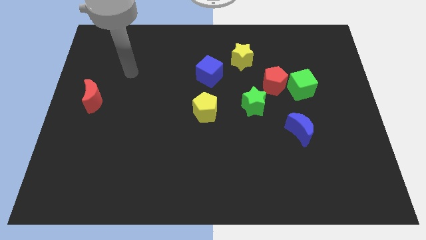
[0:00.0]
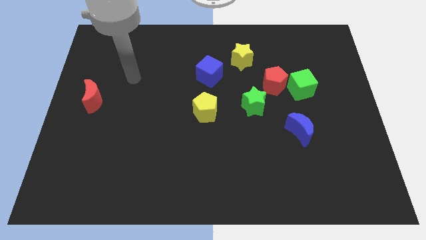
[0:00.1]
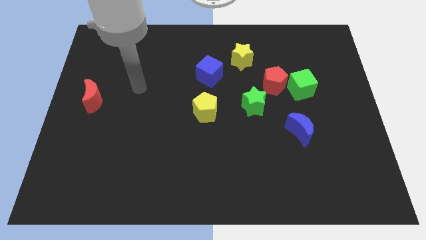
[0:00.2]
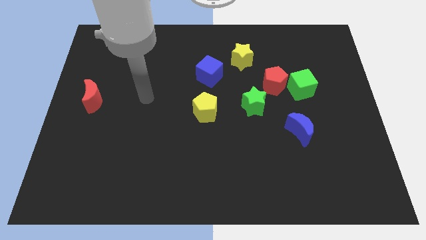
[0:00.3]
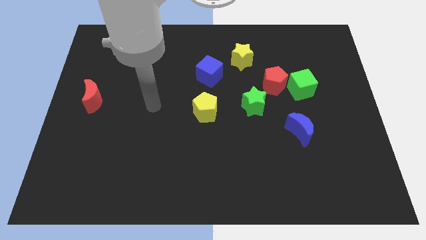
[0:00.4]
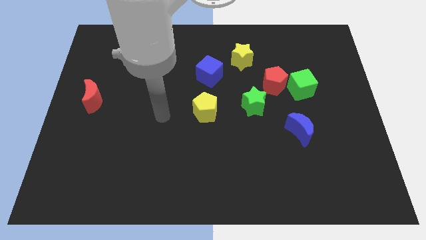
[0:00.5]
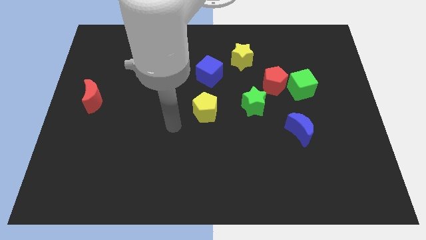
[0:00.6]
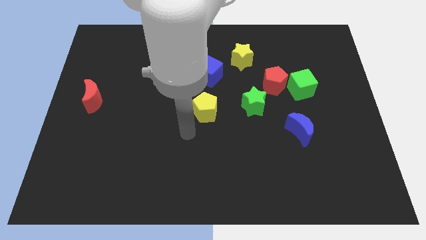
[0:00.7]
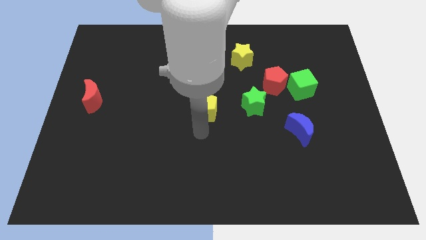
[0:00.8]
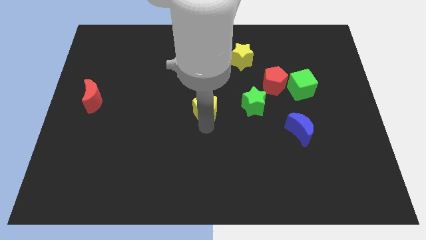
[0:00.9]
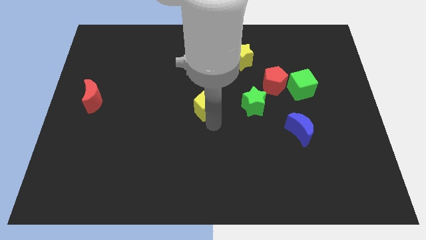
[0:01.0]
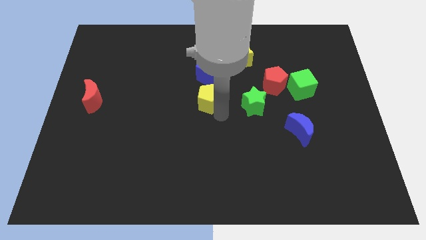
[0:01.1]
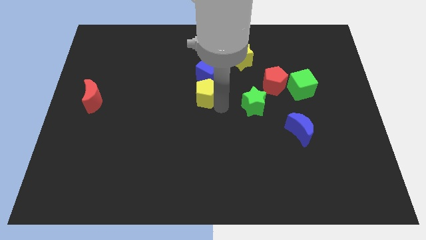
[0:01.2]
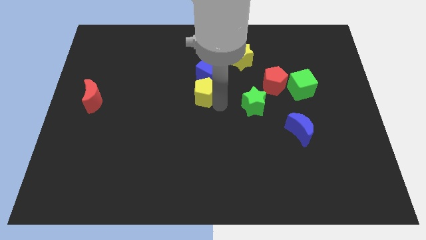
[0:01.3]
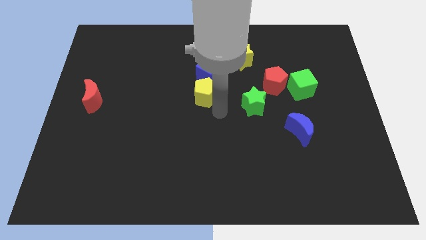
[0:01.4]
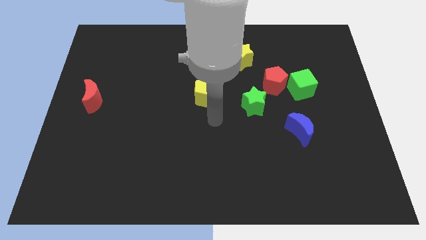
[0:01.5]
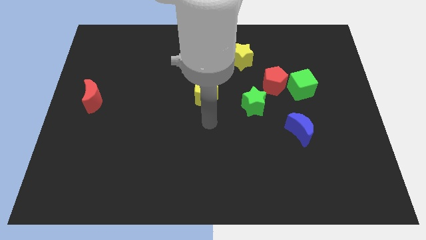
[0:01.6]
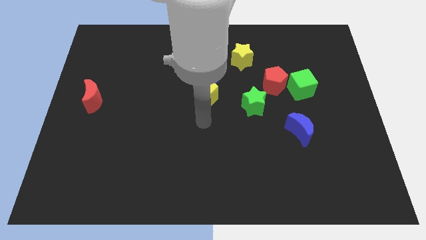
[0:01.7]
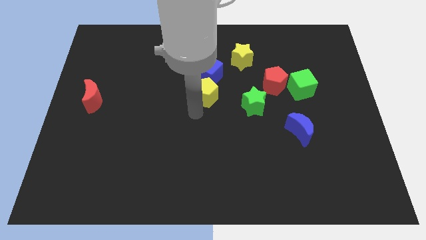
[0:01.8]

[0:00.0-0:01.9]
push the yellow pentagon into the bottom side of the blue cube

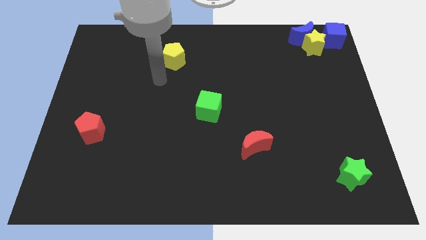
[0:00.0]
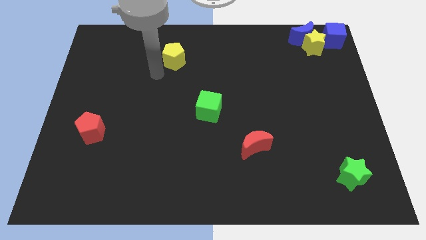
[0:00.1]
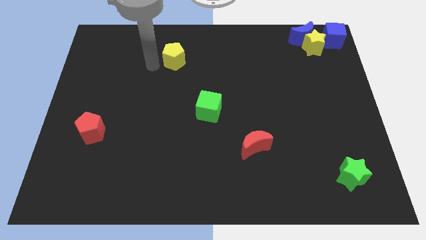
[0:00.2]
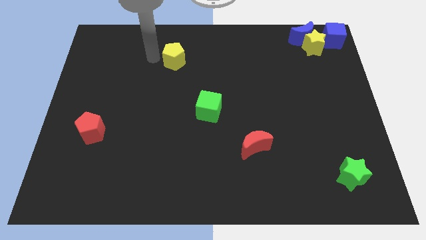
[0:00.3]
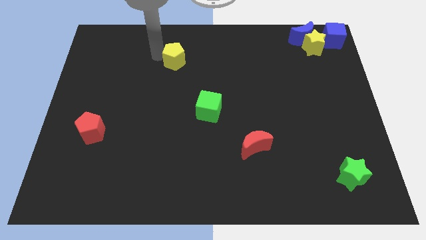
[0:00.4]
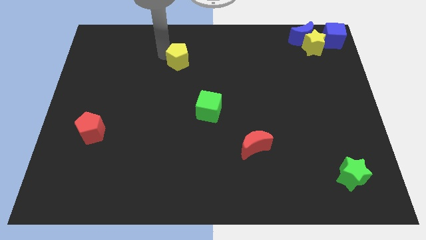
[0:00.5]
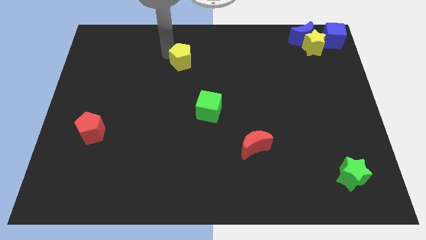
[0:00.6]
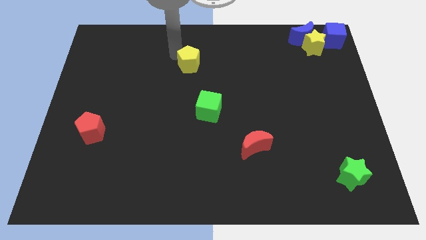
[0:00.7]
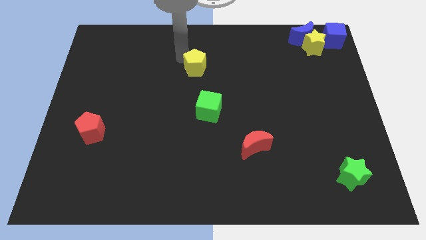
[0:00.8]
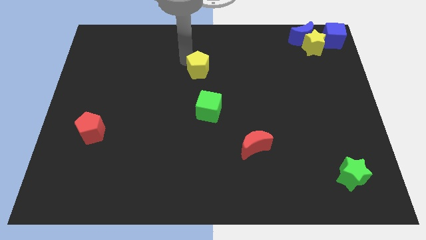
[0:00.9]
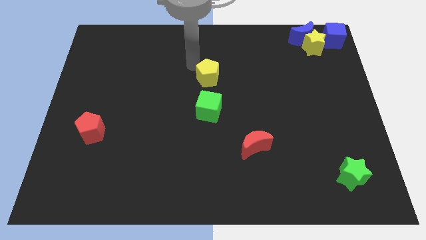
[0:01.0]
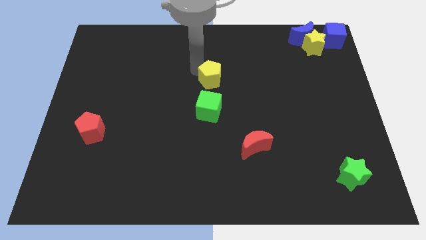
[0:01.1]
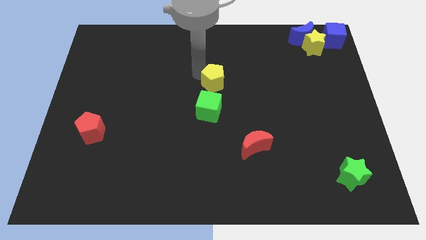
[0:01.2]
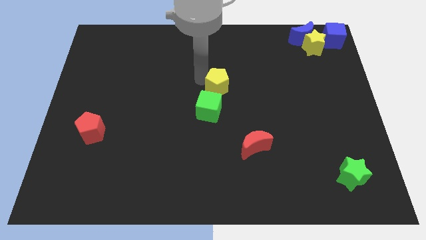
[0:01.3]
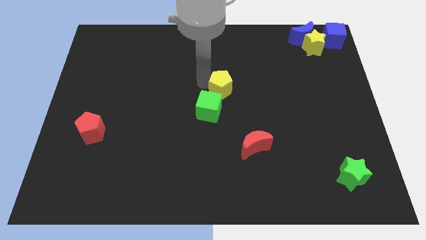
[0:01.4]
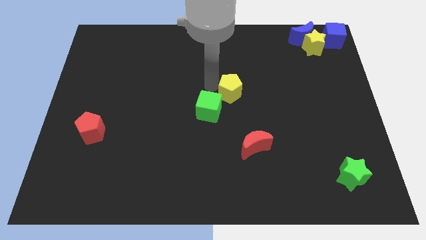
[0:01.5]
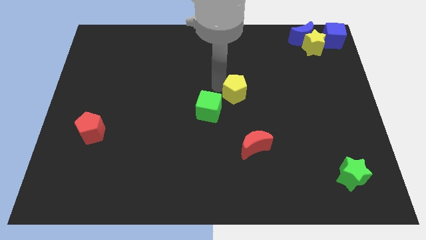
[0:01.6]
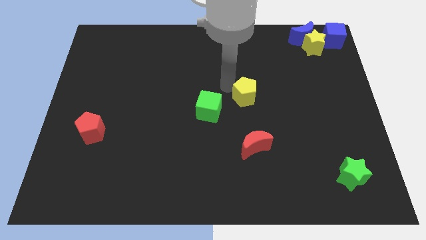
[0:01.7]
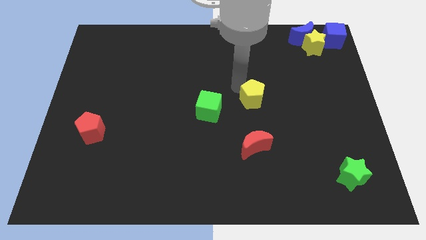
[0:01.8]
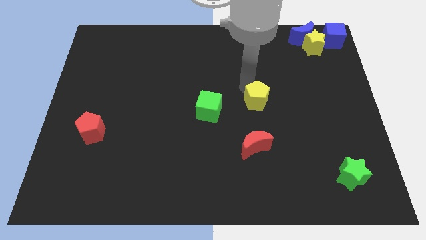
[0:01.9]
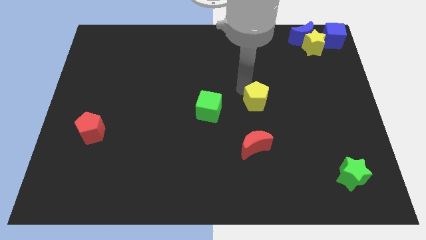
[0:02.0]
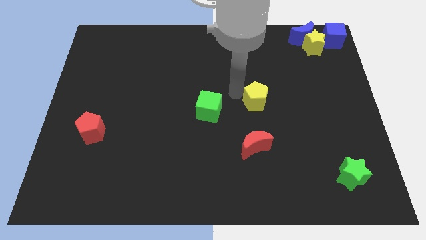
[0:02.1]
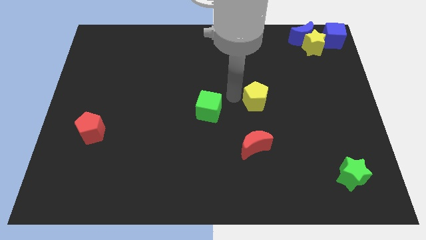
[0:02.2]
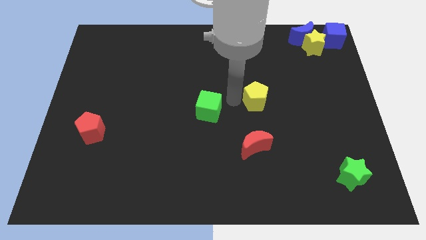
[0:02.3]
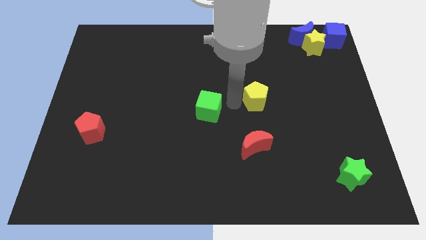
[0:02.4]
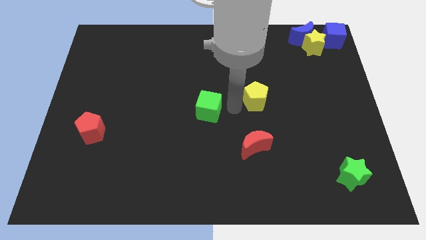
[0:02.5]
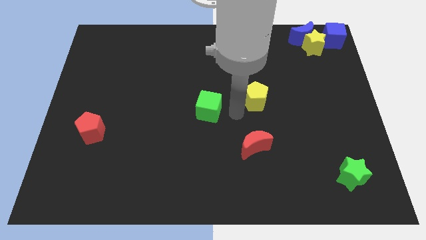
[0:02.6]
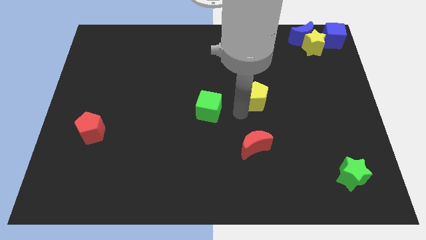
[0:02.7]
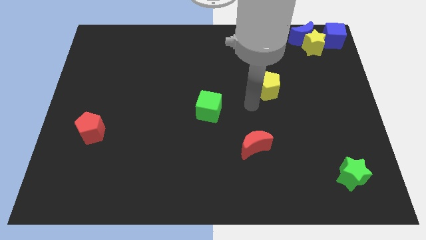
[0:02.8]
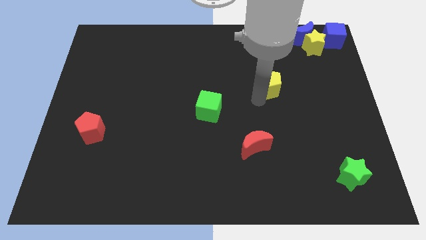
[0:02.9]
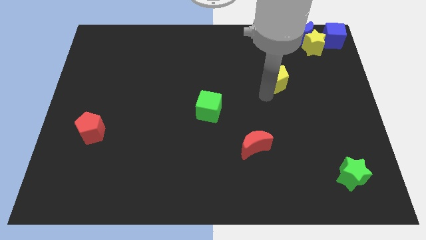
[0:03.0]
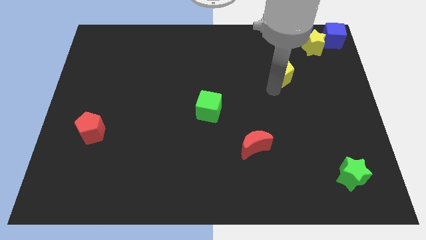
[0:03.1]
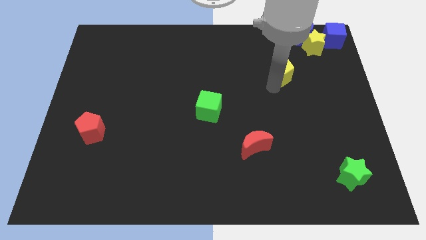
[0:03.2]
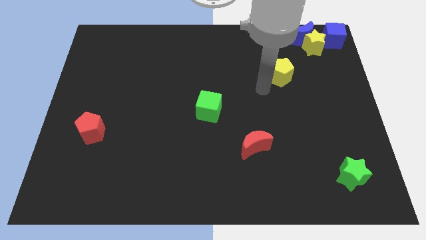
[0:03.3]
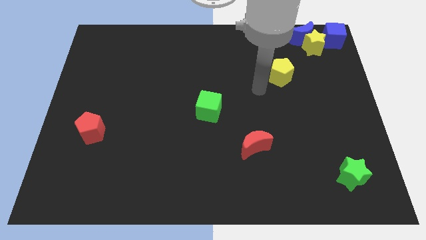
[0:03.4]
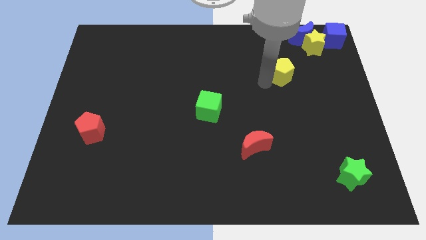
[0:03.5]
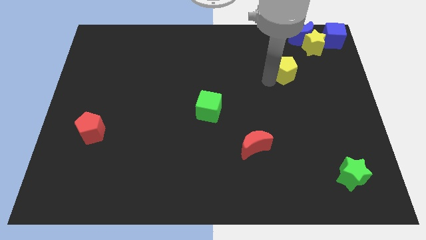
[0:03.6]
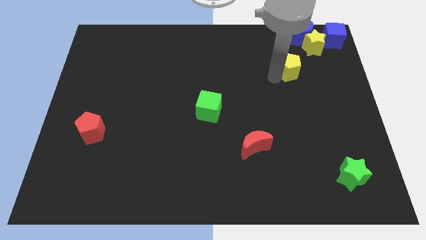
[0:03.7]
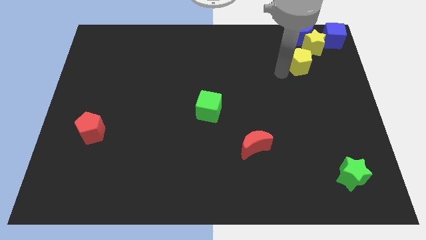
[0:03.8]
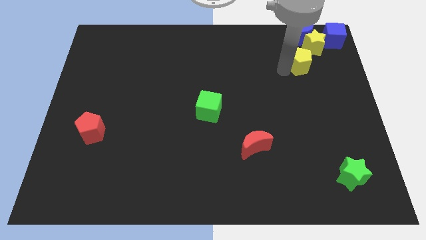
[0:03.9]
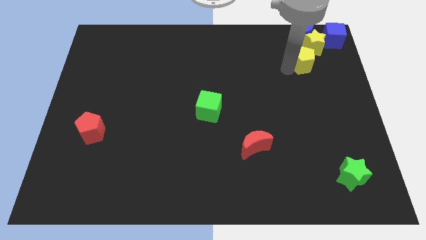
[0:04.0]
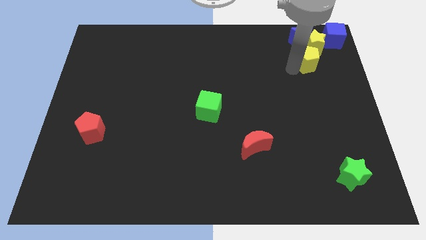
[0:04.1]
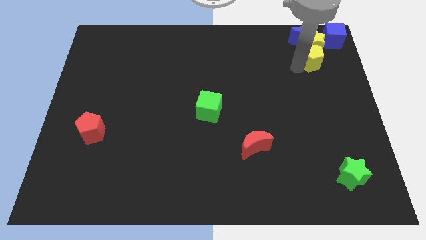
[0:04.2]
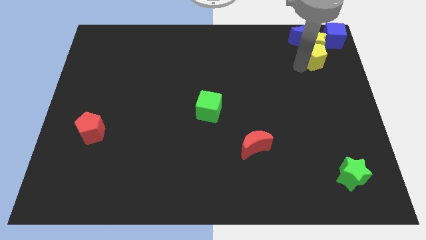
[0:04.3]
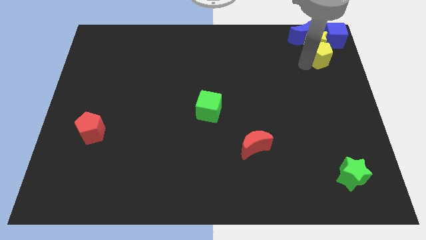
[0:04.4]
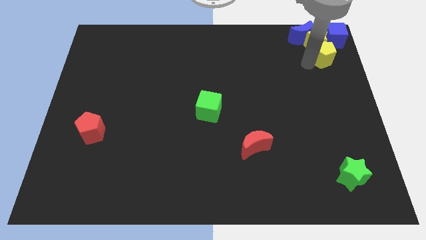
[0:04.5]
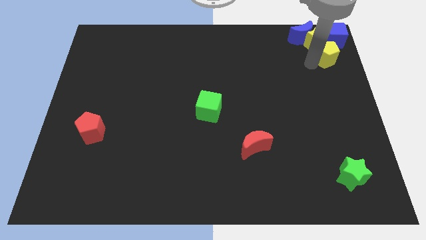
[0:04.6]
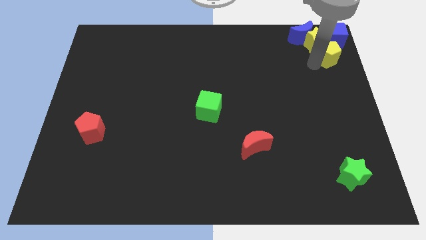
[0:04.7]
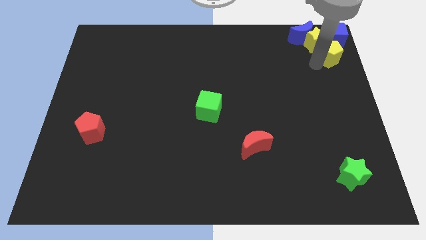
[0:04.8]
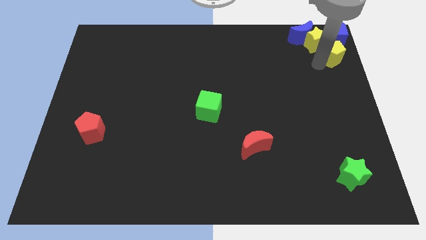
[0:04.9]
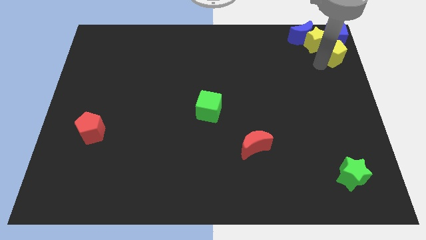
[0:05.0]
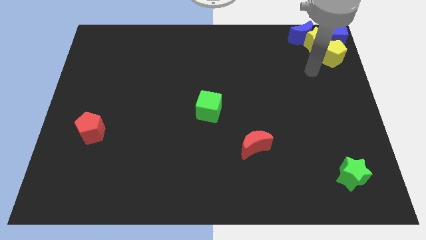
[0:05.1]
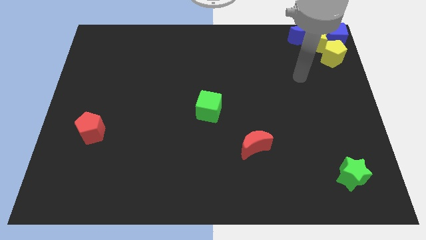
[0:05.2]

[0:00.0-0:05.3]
place the yellow pentagon close to the group of blocks at the top right corner of the board

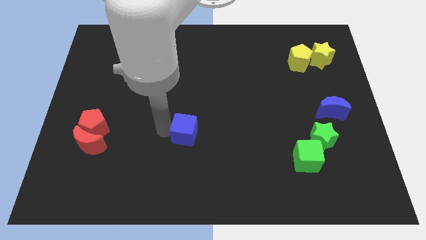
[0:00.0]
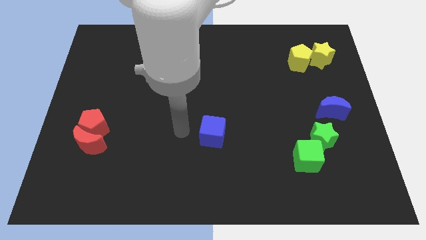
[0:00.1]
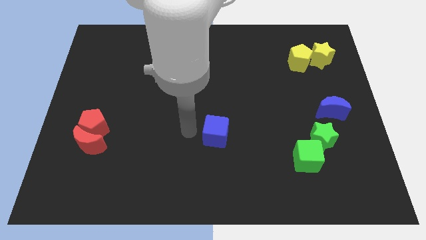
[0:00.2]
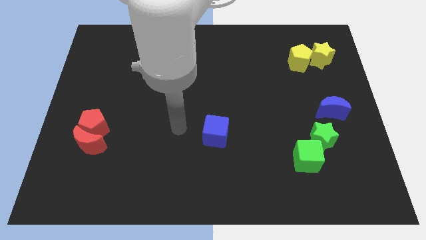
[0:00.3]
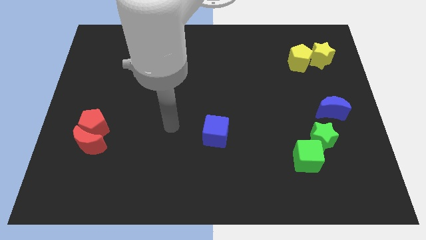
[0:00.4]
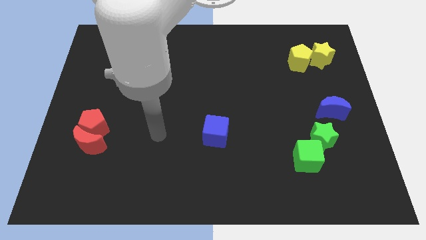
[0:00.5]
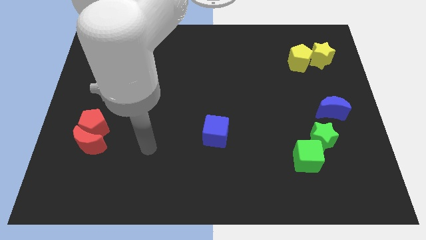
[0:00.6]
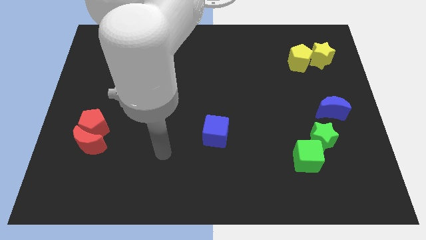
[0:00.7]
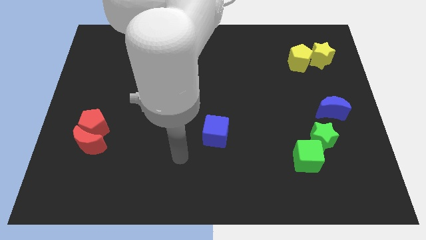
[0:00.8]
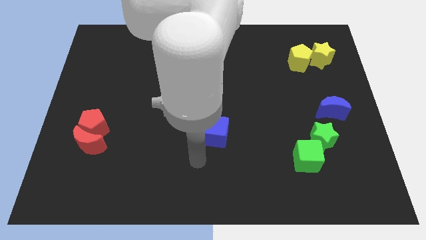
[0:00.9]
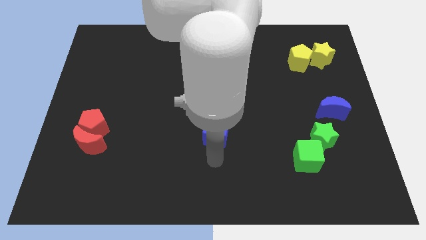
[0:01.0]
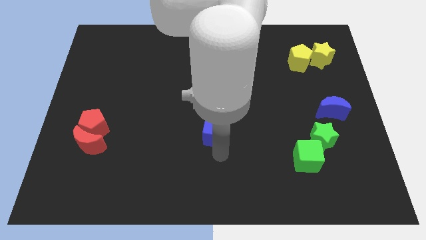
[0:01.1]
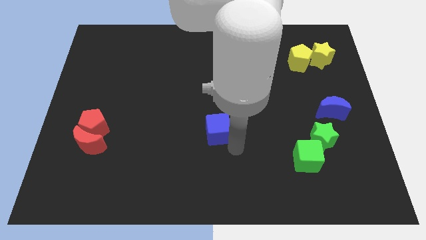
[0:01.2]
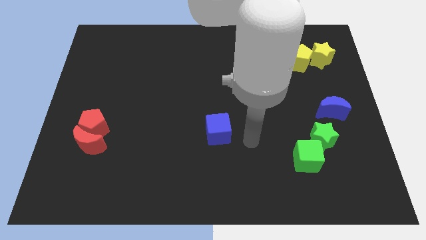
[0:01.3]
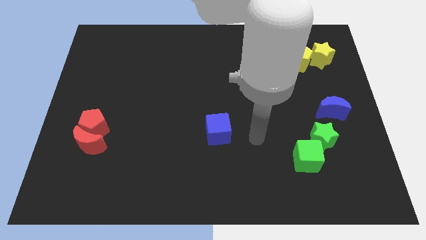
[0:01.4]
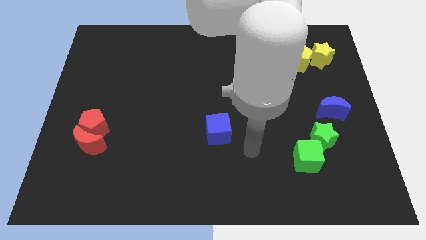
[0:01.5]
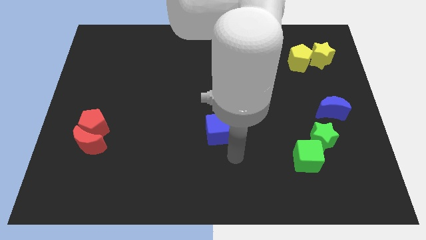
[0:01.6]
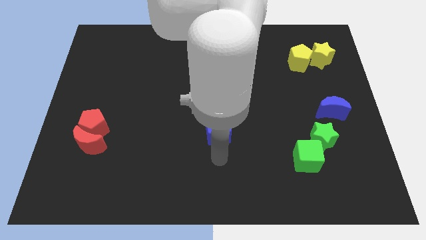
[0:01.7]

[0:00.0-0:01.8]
push the blue cube towards the center

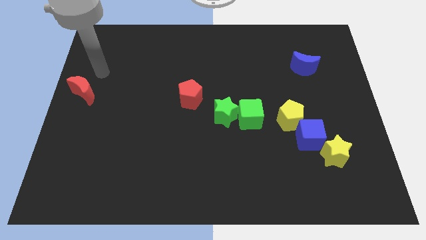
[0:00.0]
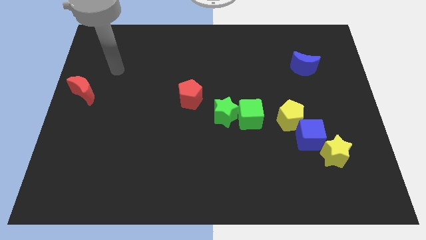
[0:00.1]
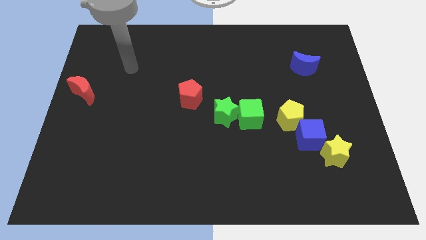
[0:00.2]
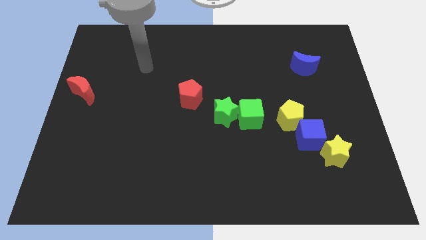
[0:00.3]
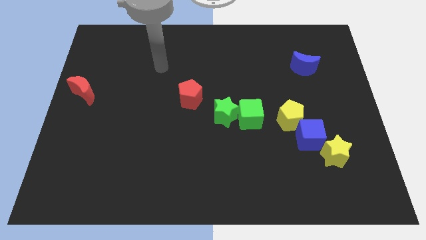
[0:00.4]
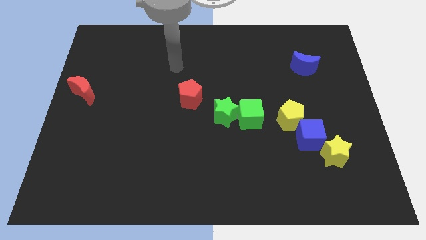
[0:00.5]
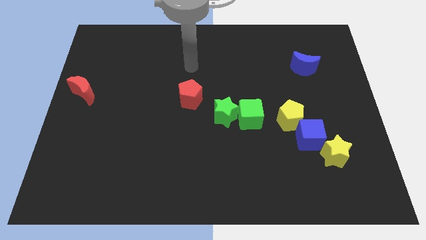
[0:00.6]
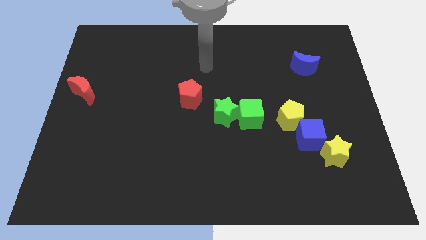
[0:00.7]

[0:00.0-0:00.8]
drag your arm to the center
